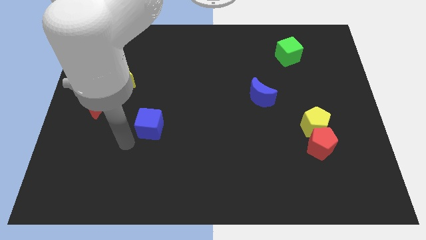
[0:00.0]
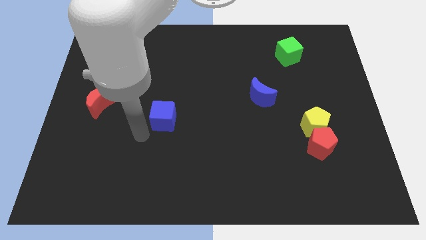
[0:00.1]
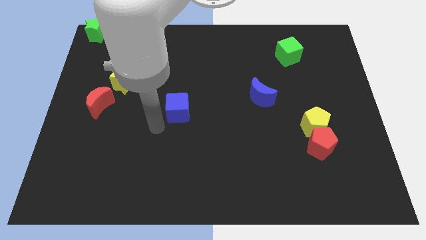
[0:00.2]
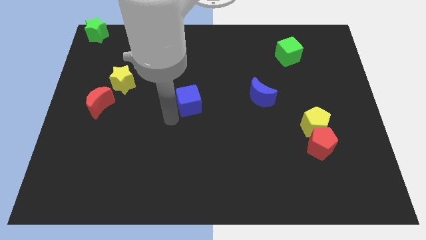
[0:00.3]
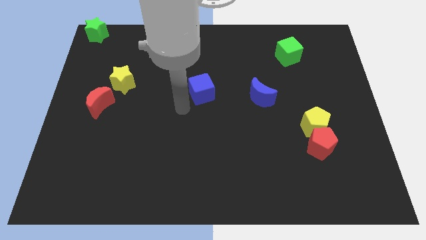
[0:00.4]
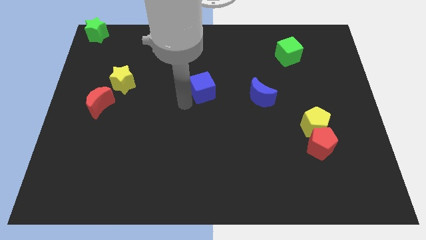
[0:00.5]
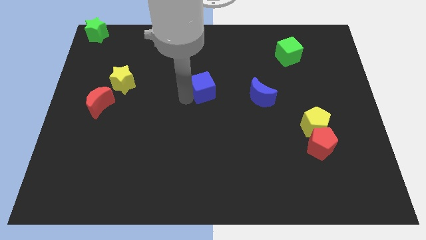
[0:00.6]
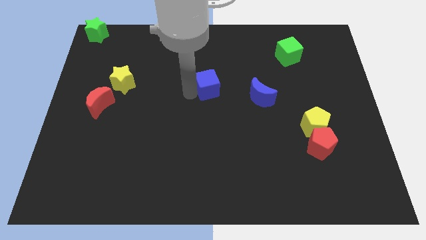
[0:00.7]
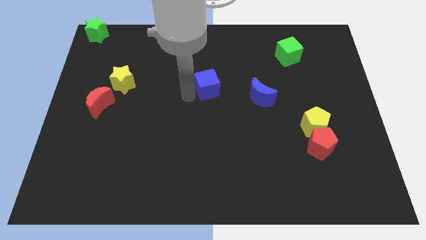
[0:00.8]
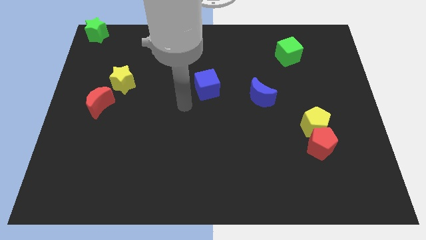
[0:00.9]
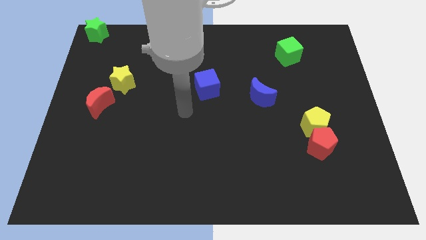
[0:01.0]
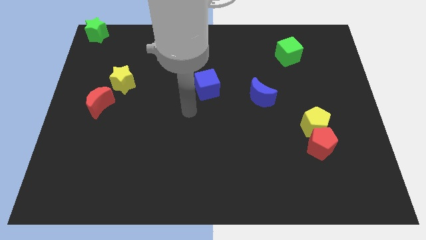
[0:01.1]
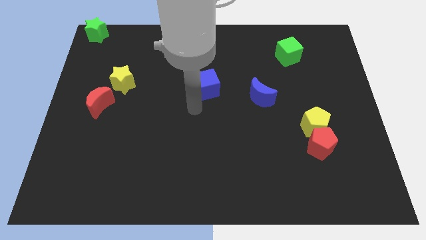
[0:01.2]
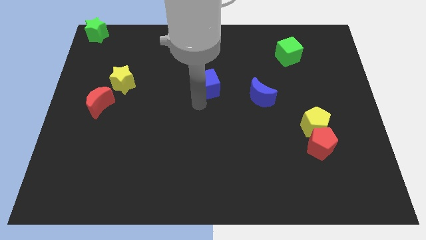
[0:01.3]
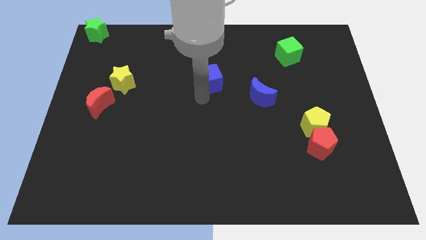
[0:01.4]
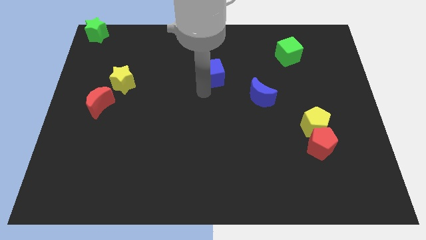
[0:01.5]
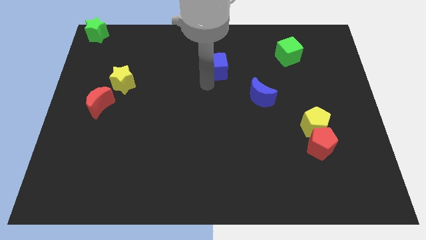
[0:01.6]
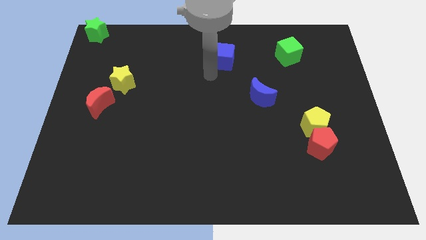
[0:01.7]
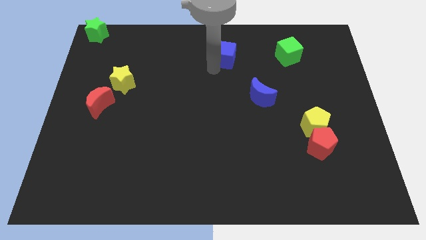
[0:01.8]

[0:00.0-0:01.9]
move the blue cube towards the top side

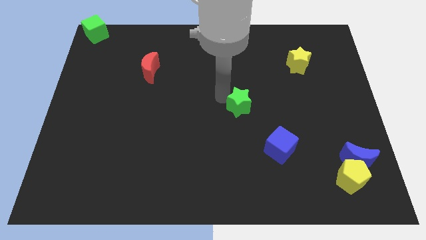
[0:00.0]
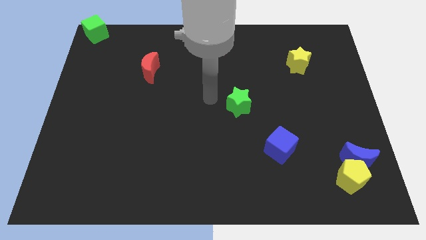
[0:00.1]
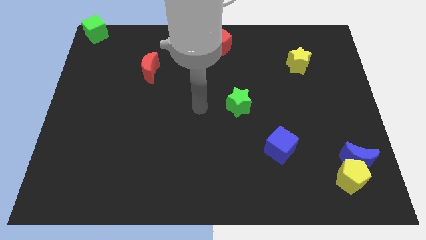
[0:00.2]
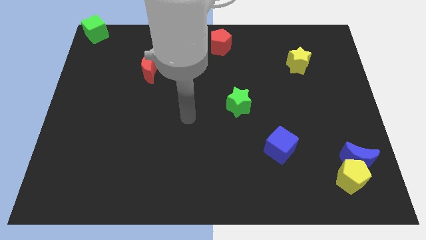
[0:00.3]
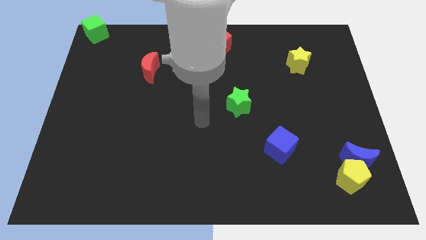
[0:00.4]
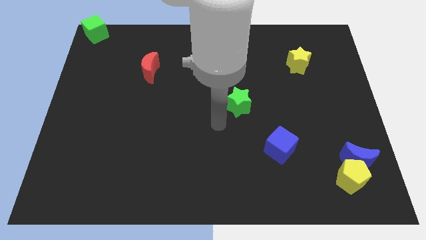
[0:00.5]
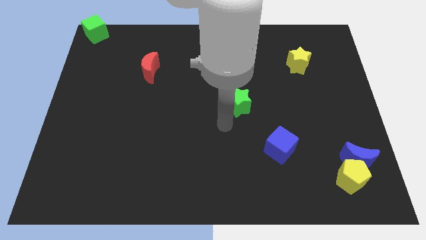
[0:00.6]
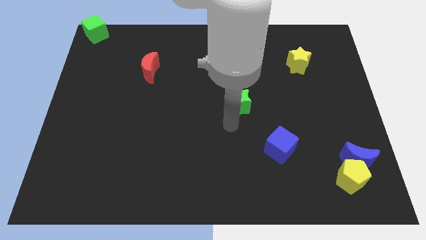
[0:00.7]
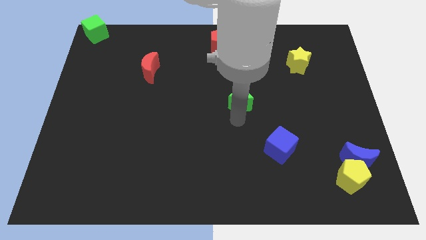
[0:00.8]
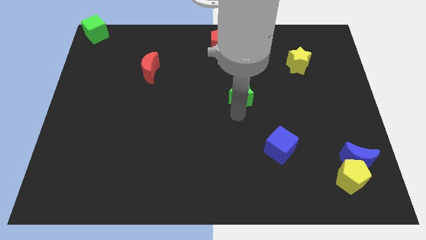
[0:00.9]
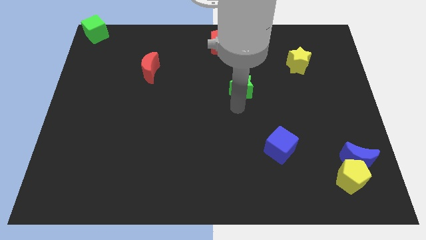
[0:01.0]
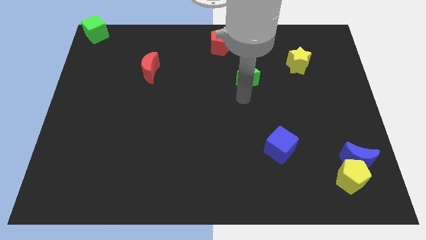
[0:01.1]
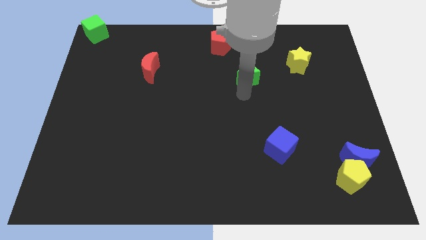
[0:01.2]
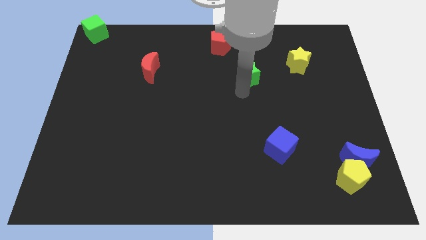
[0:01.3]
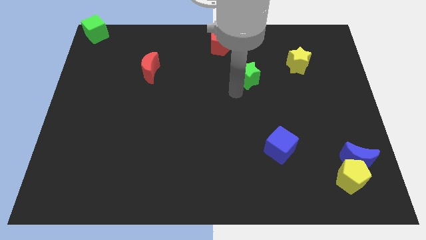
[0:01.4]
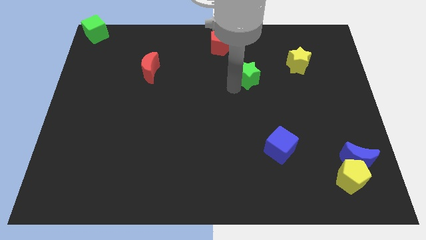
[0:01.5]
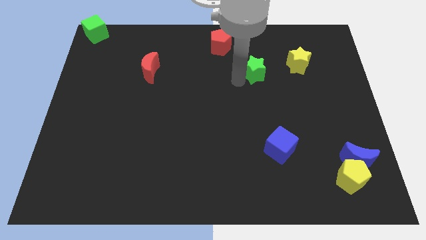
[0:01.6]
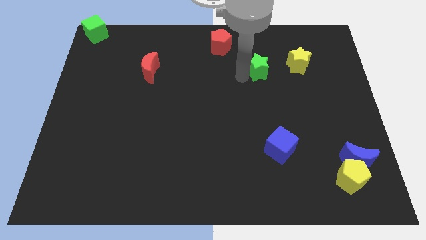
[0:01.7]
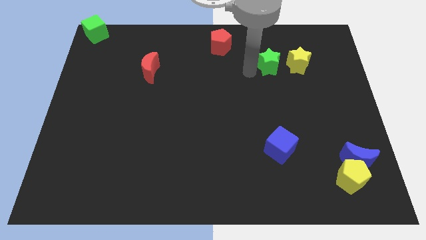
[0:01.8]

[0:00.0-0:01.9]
push the green star to the left of the yellow star

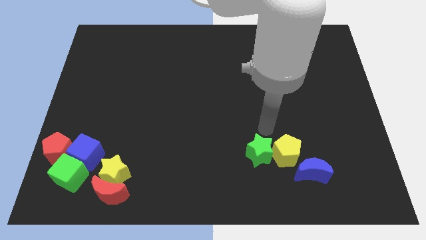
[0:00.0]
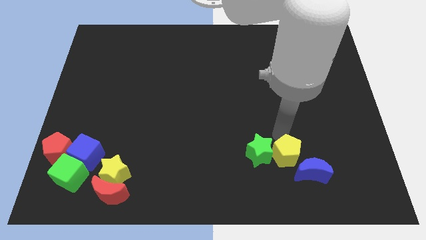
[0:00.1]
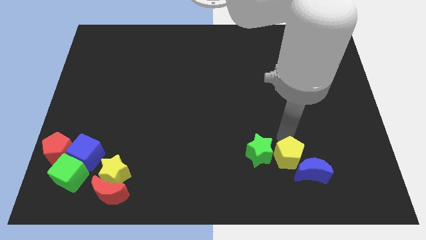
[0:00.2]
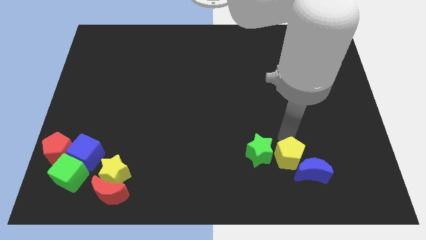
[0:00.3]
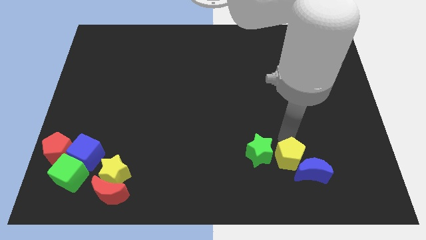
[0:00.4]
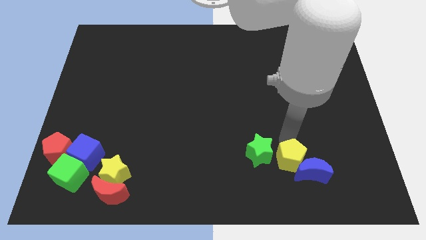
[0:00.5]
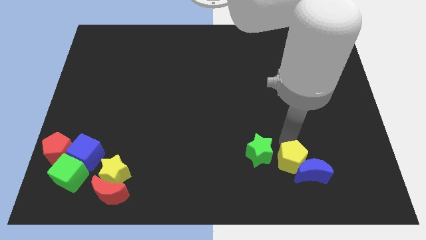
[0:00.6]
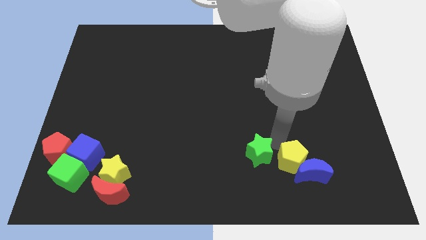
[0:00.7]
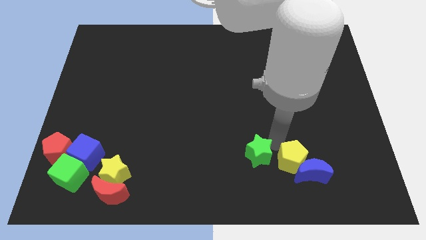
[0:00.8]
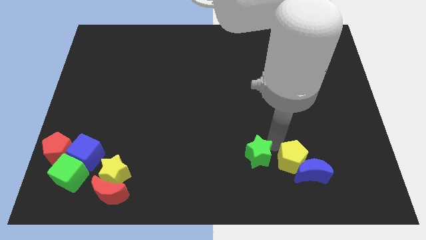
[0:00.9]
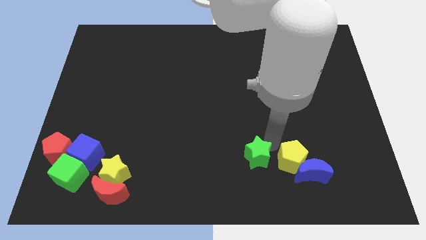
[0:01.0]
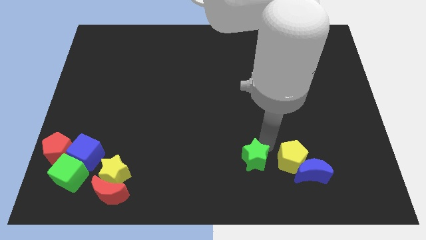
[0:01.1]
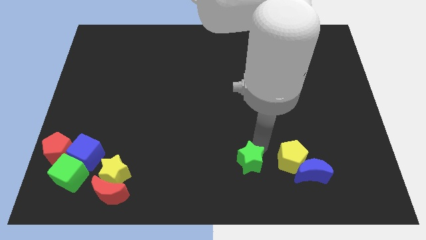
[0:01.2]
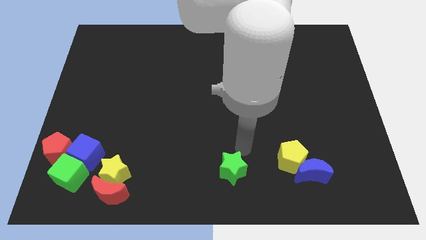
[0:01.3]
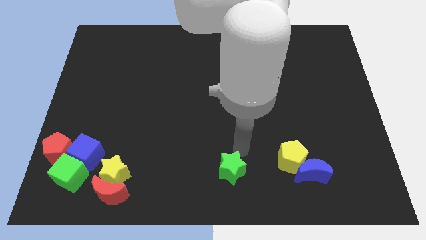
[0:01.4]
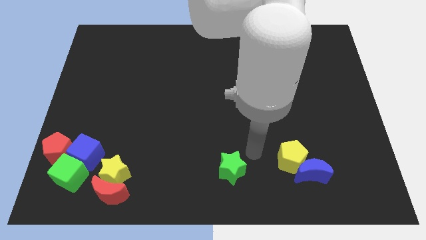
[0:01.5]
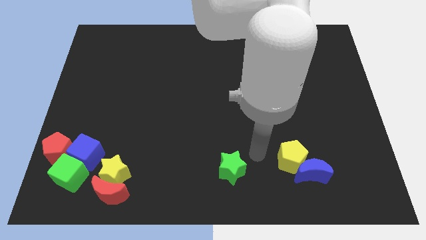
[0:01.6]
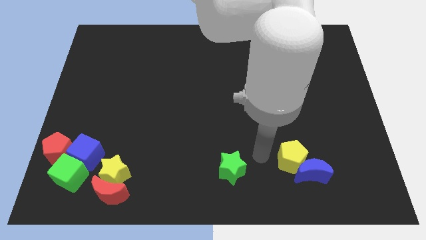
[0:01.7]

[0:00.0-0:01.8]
separate the green star from the yellow pentagon

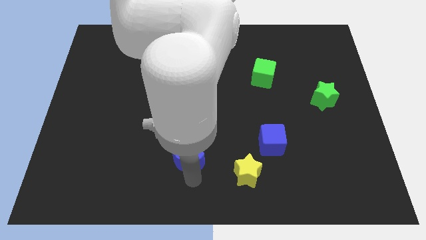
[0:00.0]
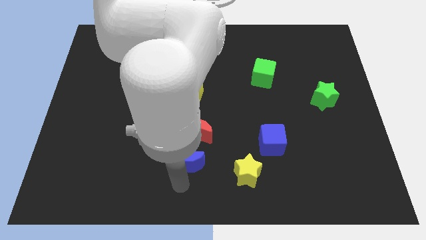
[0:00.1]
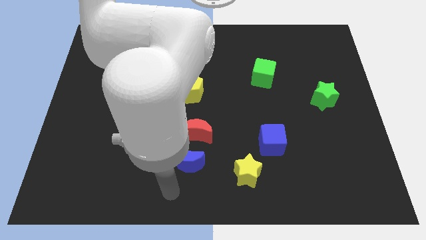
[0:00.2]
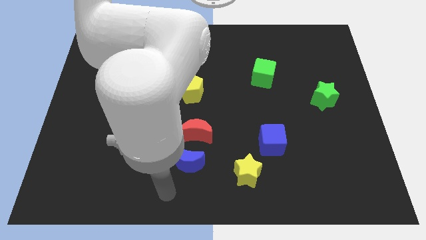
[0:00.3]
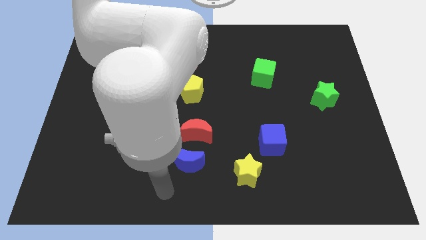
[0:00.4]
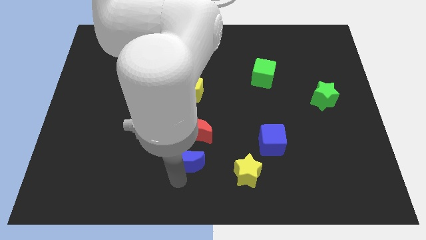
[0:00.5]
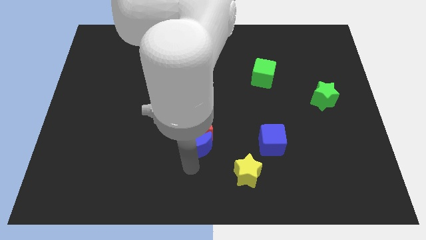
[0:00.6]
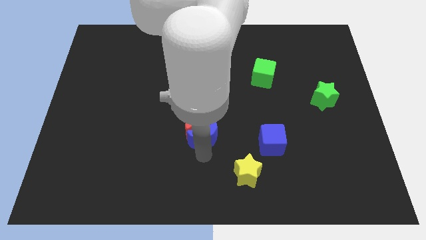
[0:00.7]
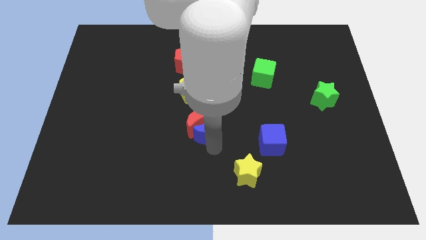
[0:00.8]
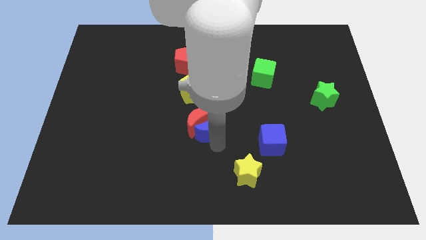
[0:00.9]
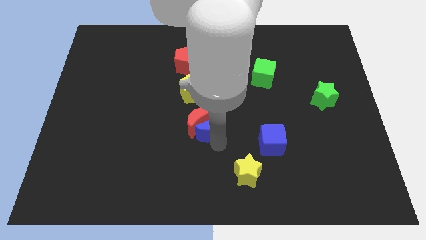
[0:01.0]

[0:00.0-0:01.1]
push the blue moon into the red moon

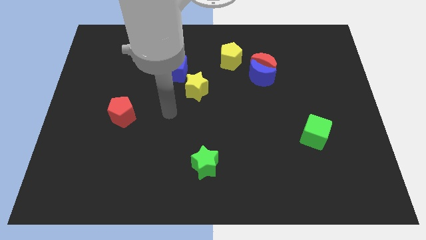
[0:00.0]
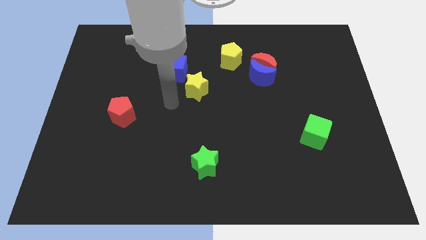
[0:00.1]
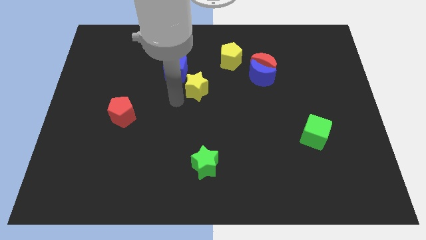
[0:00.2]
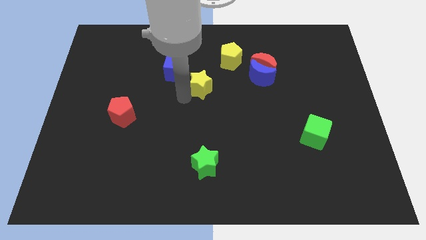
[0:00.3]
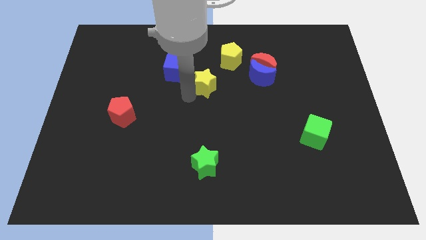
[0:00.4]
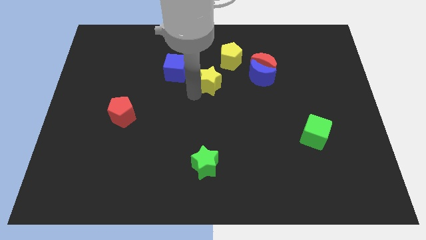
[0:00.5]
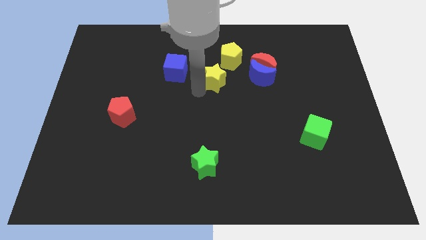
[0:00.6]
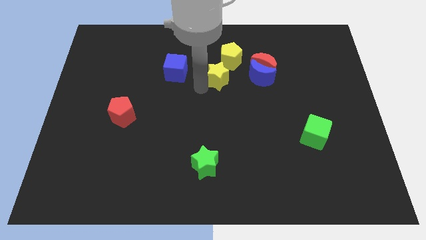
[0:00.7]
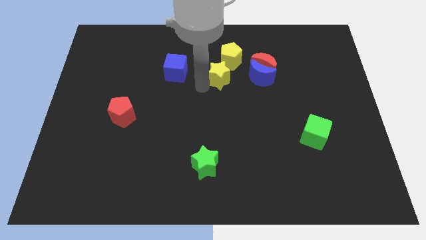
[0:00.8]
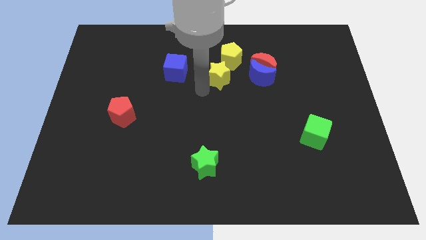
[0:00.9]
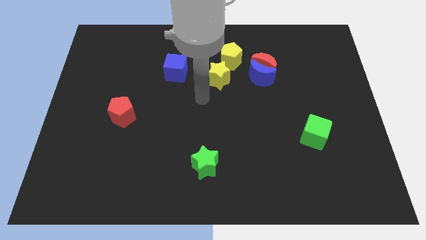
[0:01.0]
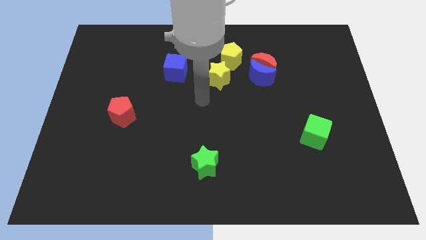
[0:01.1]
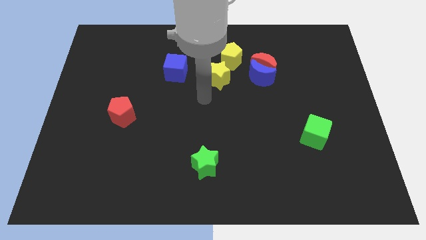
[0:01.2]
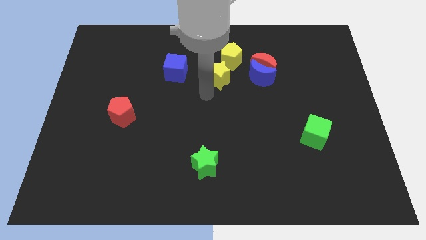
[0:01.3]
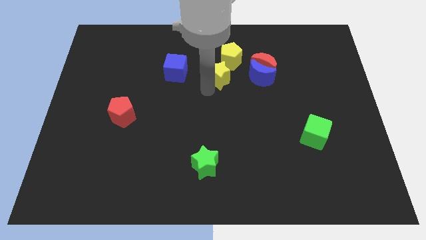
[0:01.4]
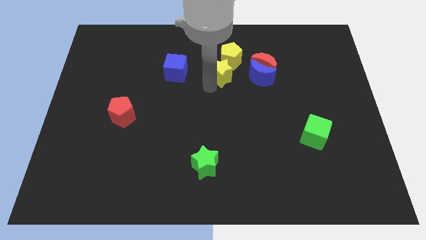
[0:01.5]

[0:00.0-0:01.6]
separate the yellow star from the blue cube

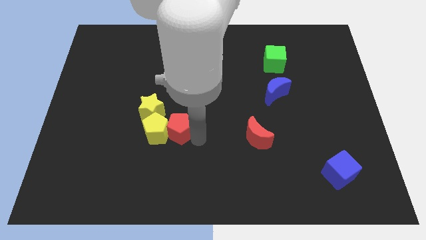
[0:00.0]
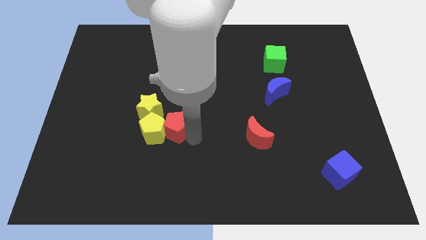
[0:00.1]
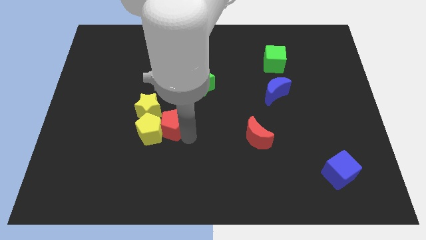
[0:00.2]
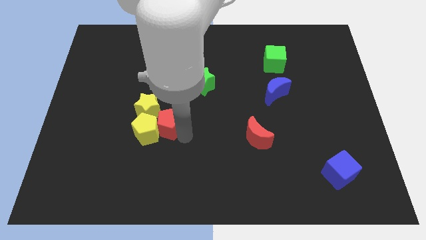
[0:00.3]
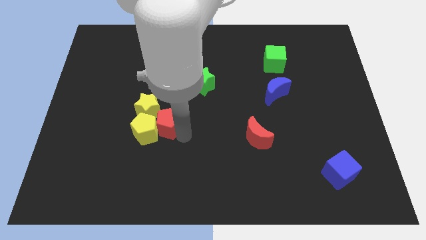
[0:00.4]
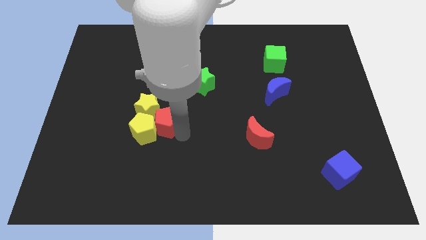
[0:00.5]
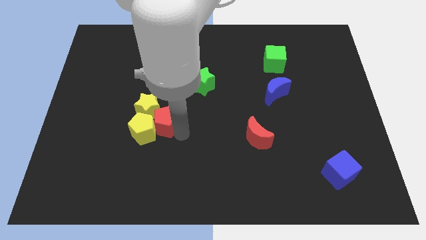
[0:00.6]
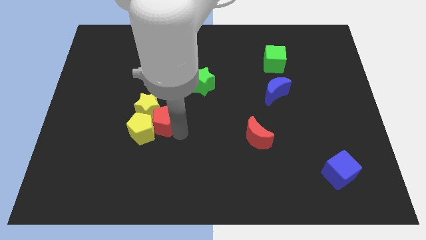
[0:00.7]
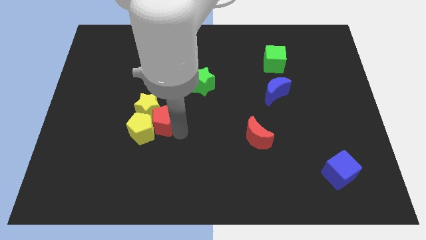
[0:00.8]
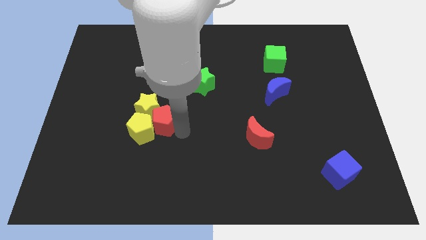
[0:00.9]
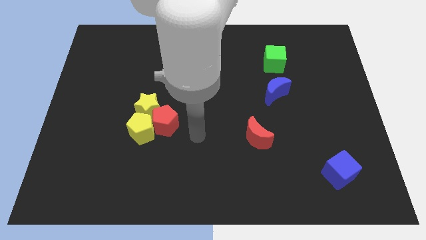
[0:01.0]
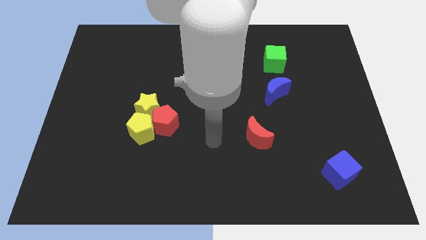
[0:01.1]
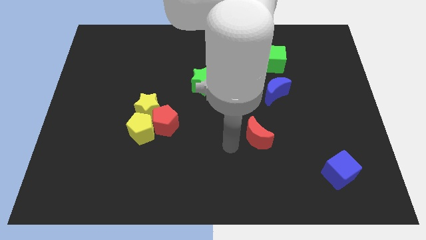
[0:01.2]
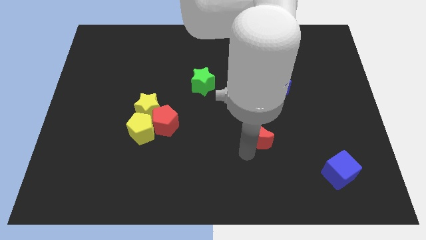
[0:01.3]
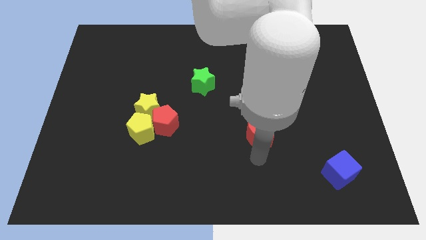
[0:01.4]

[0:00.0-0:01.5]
move red pentagon close to yellow star
